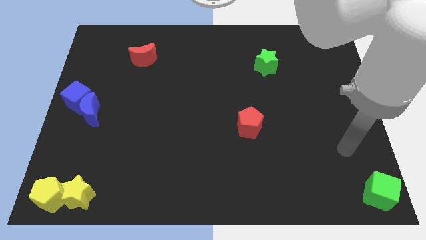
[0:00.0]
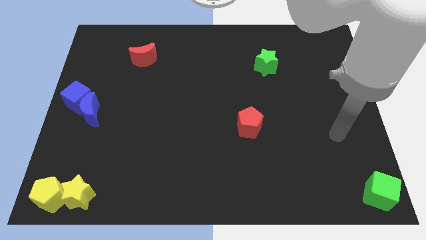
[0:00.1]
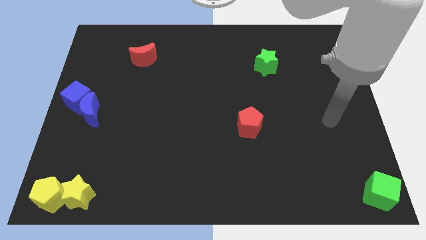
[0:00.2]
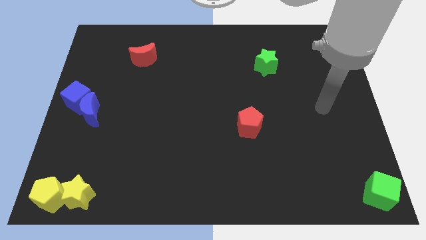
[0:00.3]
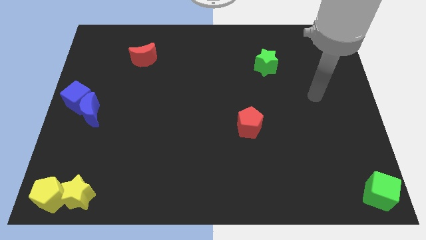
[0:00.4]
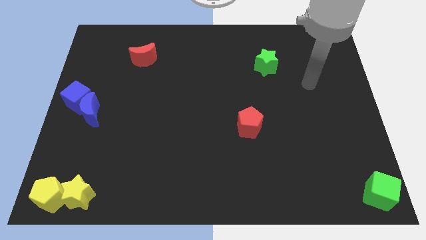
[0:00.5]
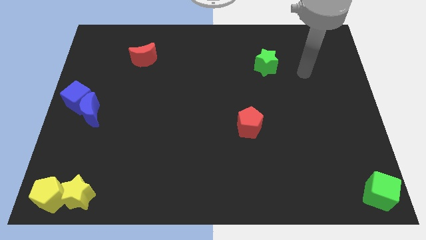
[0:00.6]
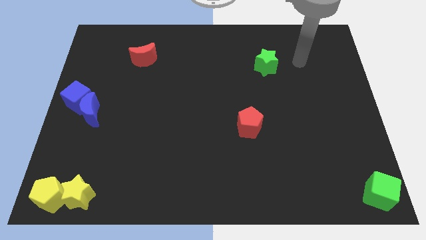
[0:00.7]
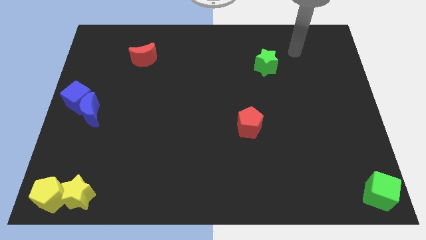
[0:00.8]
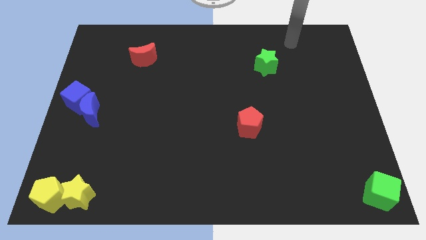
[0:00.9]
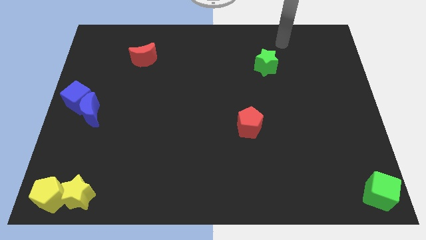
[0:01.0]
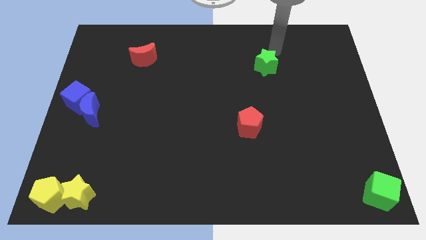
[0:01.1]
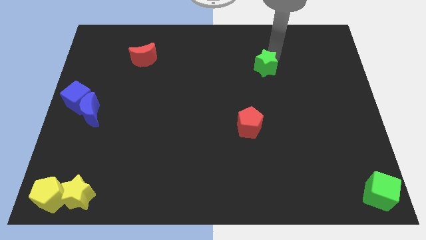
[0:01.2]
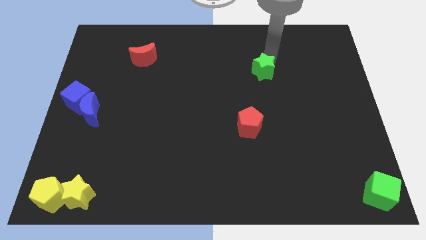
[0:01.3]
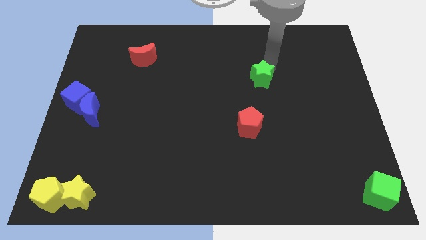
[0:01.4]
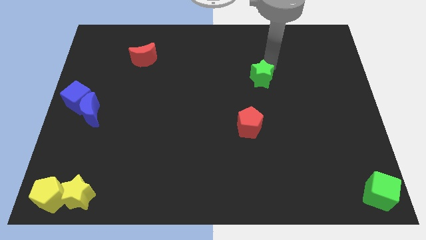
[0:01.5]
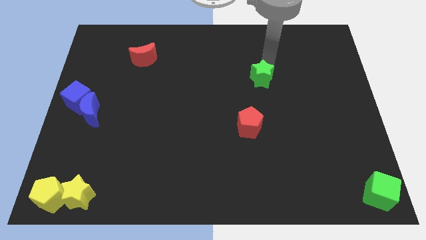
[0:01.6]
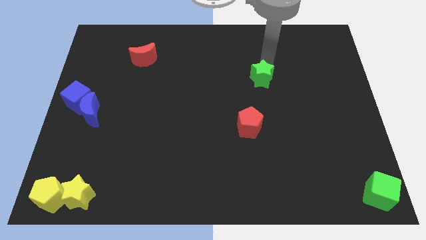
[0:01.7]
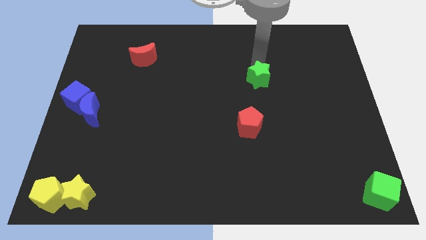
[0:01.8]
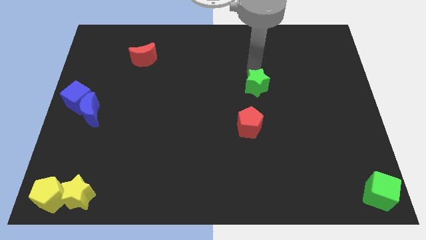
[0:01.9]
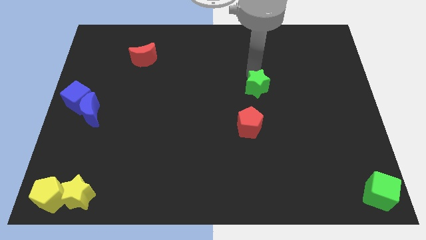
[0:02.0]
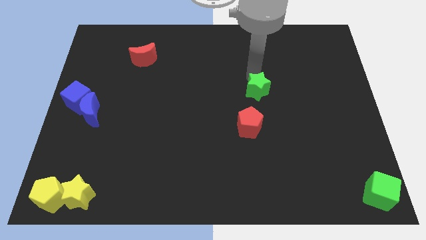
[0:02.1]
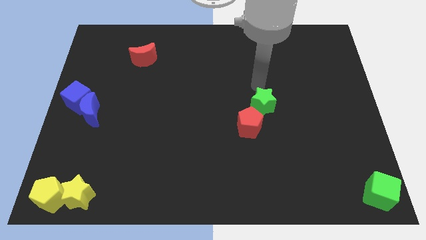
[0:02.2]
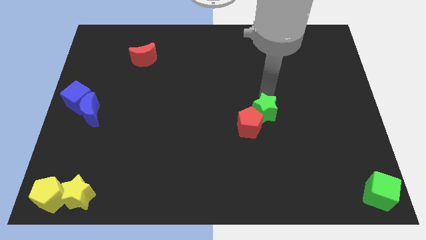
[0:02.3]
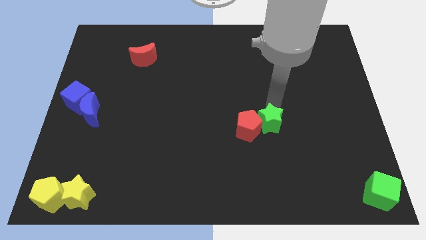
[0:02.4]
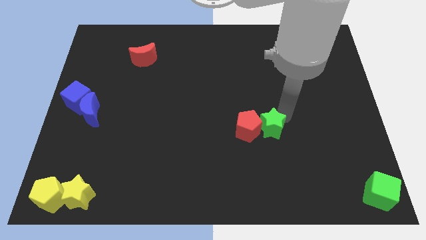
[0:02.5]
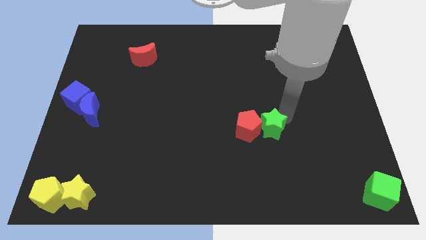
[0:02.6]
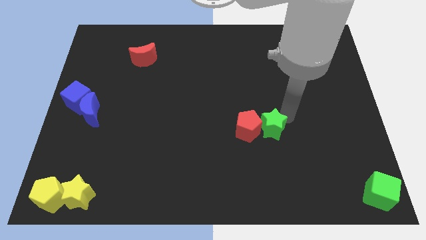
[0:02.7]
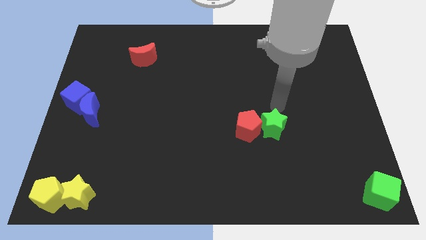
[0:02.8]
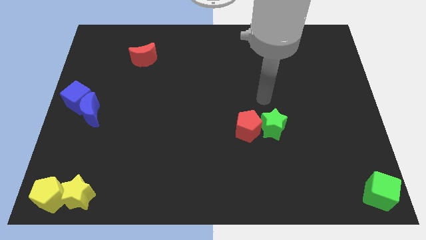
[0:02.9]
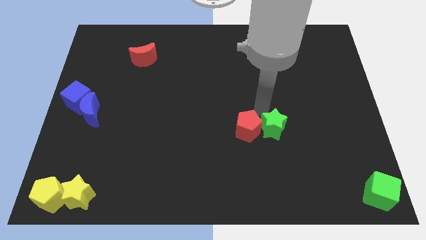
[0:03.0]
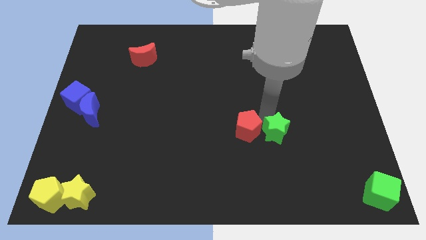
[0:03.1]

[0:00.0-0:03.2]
move the green star at the right side of the red pentagon

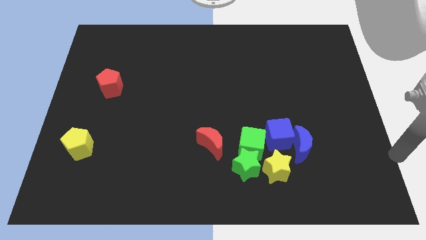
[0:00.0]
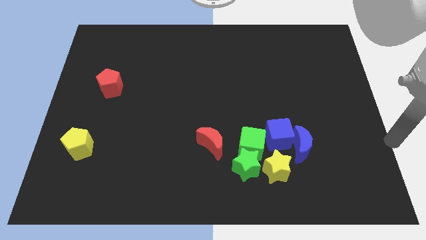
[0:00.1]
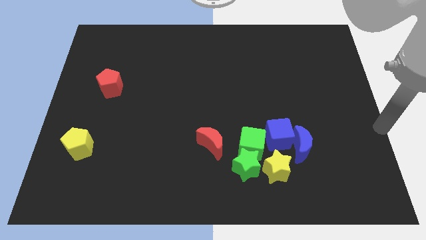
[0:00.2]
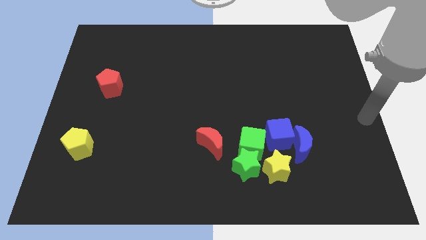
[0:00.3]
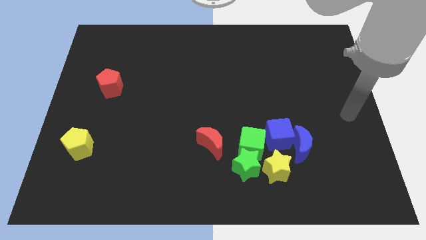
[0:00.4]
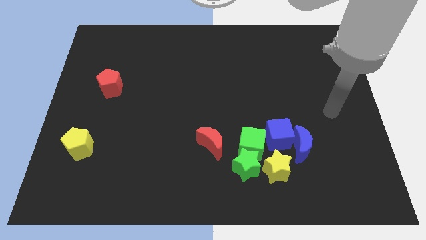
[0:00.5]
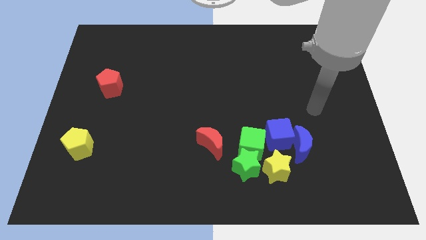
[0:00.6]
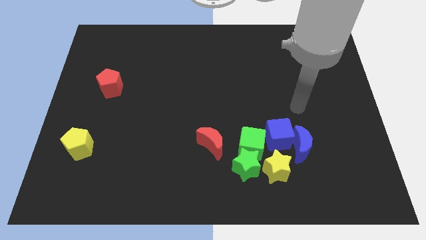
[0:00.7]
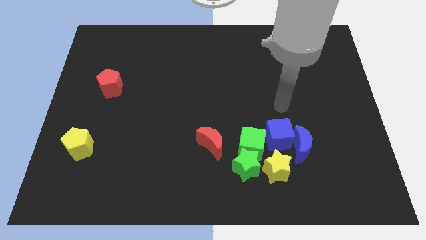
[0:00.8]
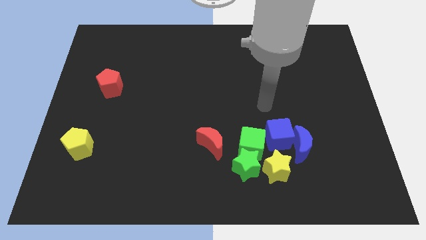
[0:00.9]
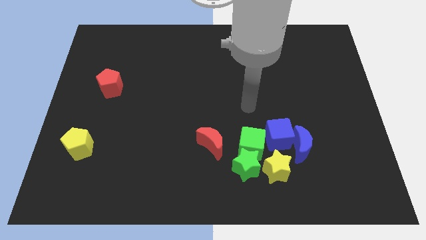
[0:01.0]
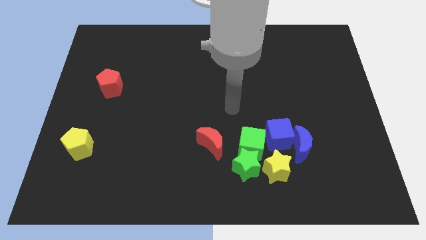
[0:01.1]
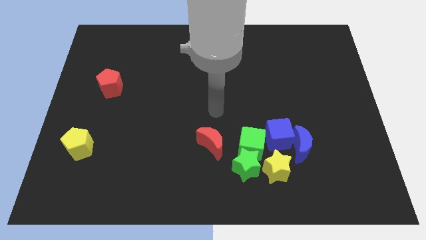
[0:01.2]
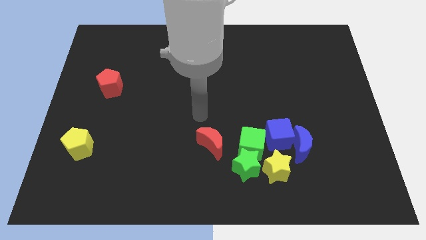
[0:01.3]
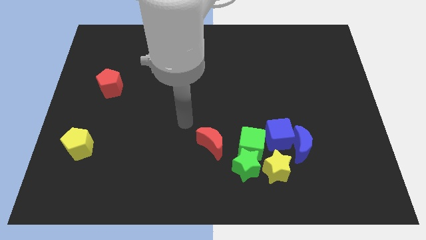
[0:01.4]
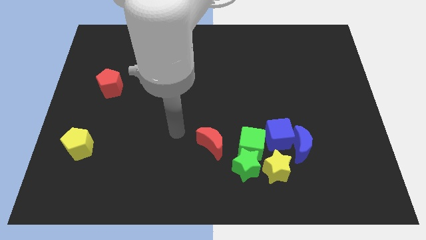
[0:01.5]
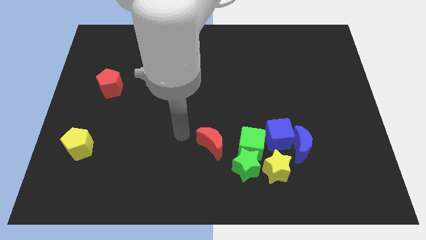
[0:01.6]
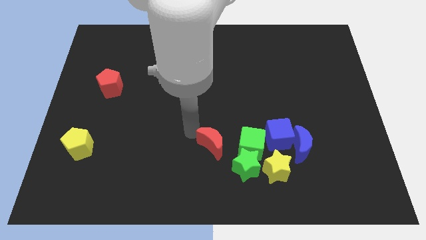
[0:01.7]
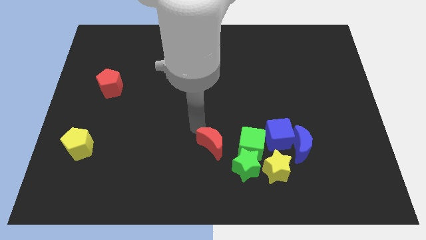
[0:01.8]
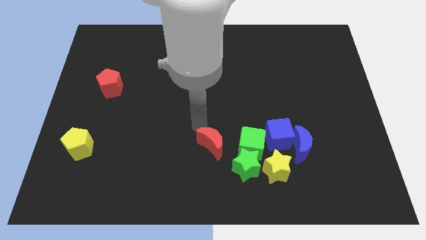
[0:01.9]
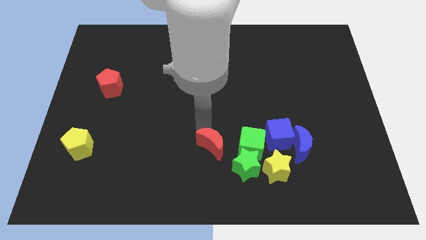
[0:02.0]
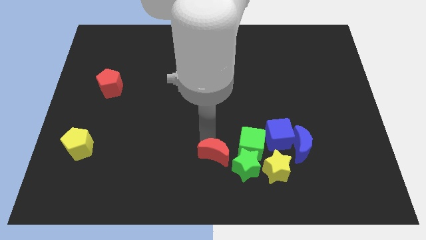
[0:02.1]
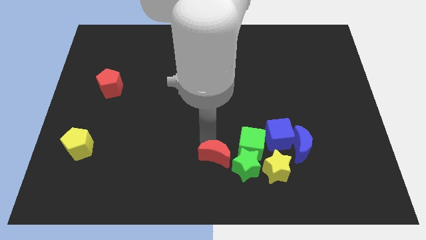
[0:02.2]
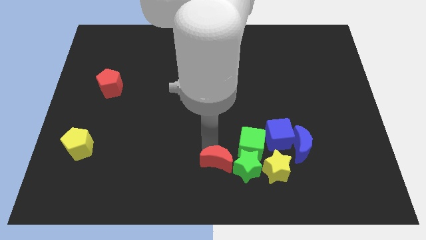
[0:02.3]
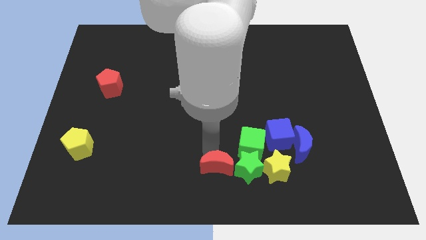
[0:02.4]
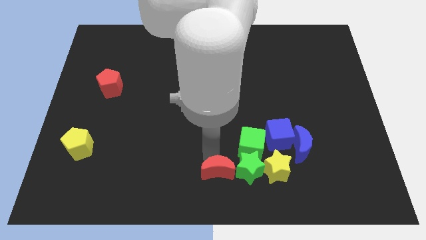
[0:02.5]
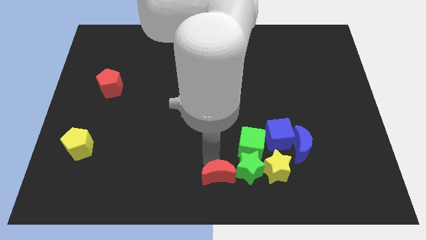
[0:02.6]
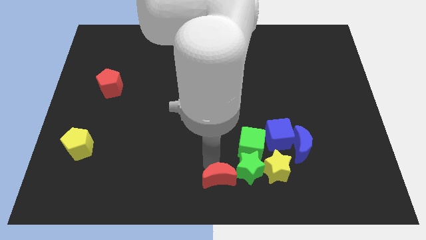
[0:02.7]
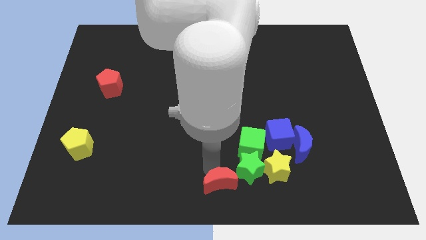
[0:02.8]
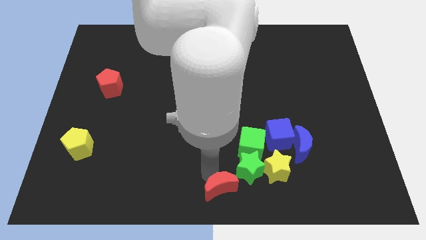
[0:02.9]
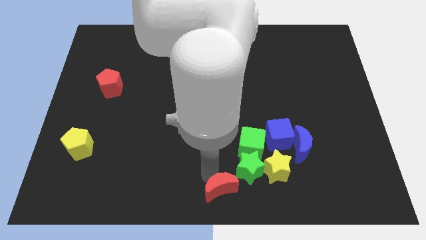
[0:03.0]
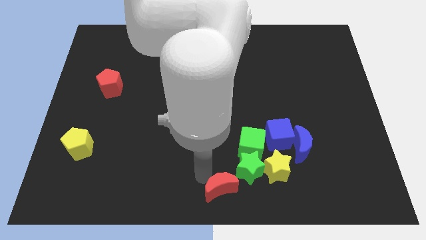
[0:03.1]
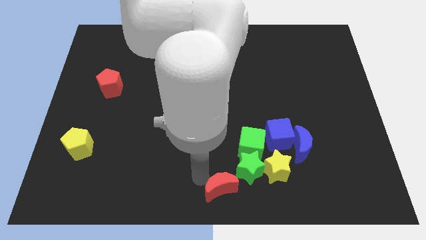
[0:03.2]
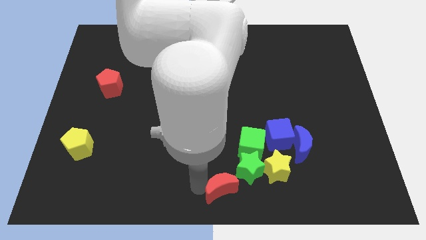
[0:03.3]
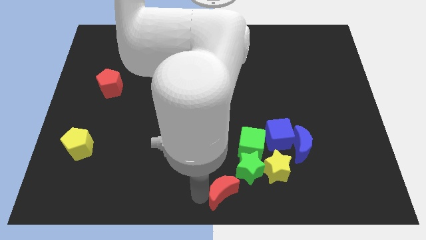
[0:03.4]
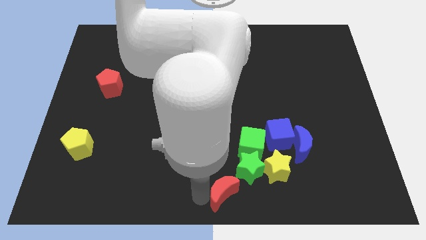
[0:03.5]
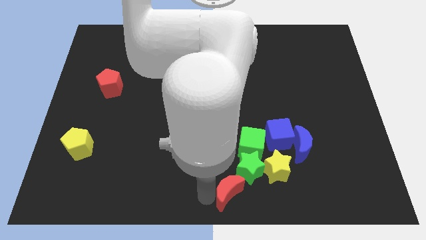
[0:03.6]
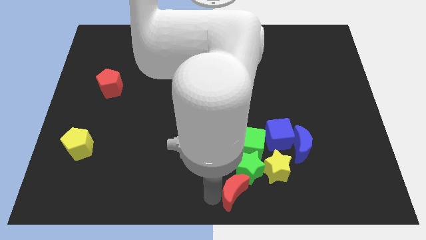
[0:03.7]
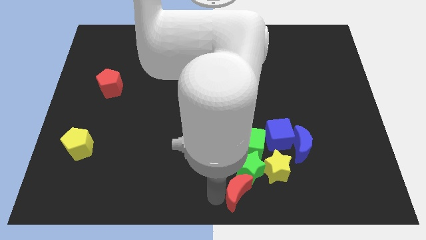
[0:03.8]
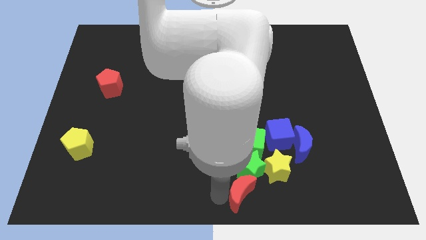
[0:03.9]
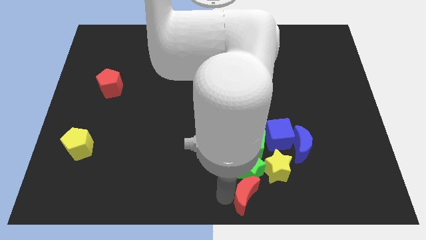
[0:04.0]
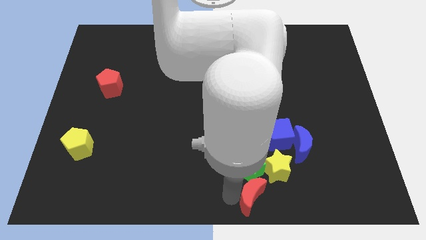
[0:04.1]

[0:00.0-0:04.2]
place red moon to the bottom of the board

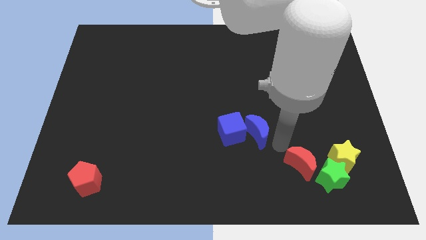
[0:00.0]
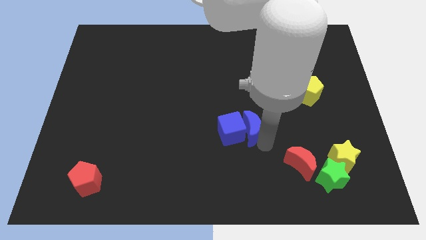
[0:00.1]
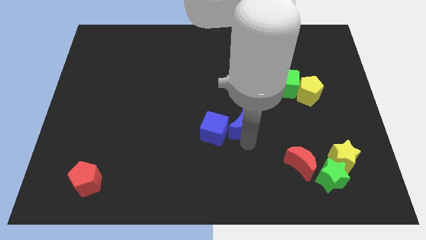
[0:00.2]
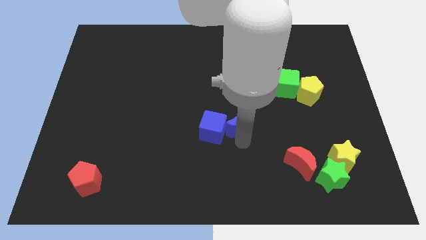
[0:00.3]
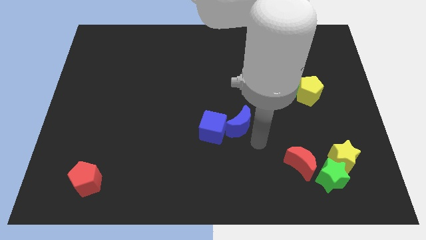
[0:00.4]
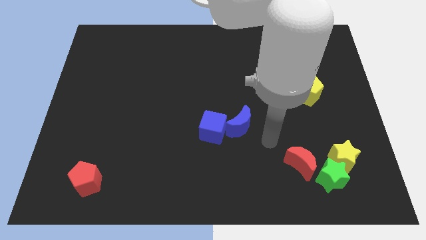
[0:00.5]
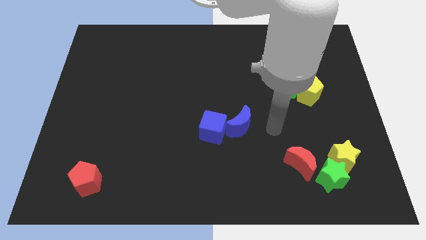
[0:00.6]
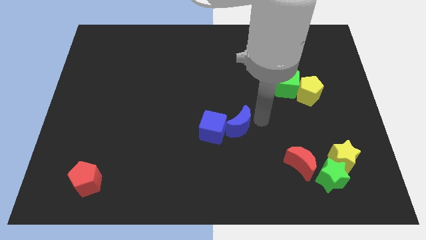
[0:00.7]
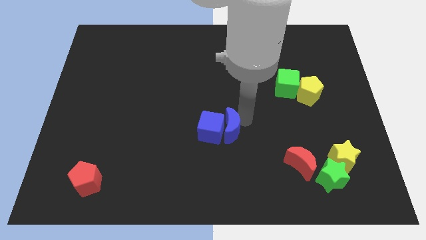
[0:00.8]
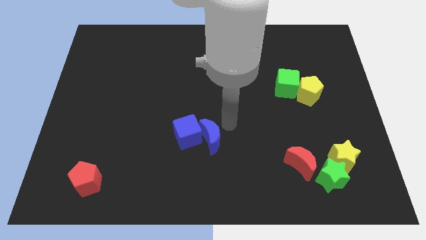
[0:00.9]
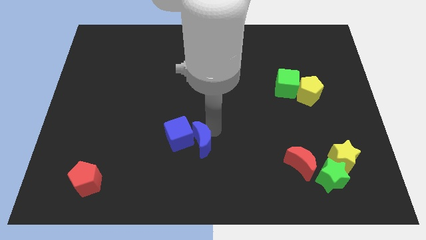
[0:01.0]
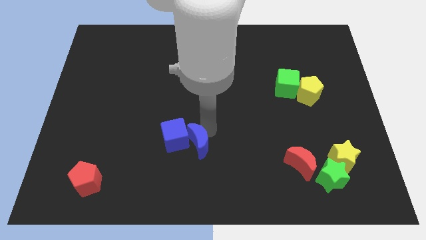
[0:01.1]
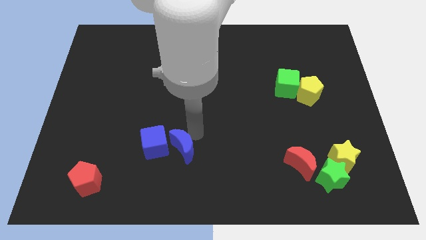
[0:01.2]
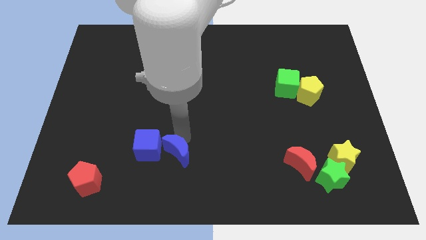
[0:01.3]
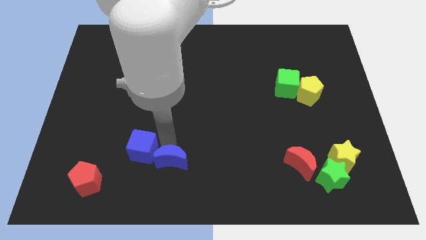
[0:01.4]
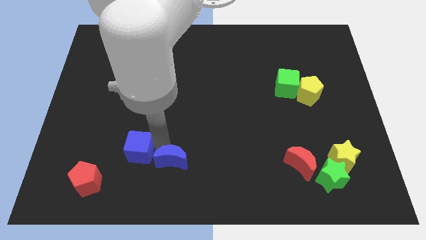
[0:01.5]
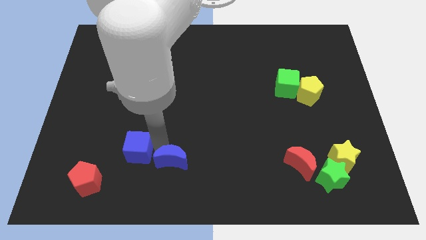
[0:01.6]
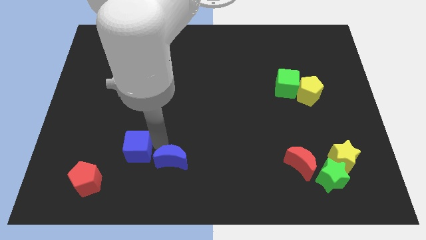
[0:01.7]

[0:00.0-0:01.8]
push the blue blocks towards bottom left side
